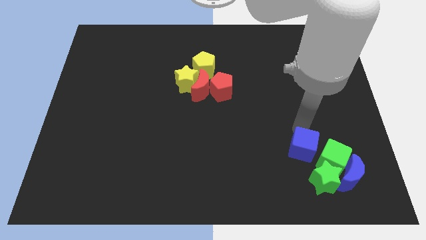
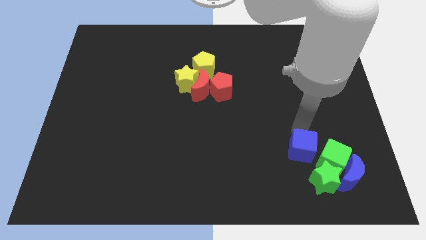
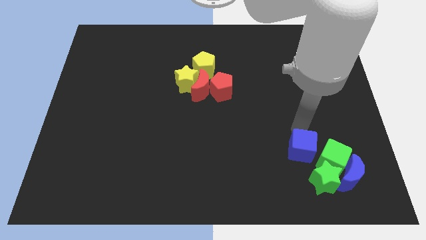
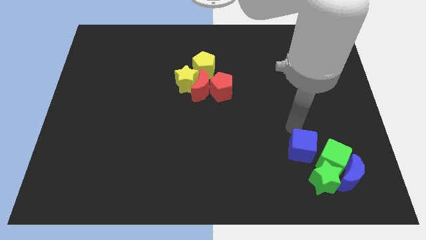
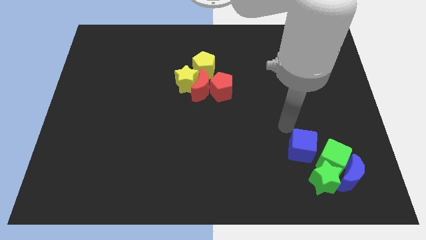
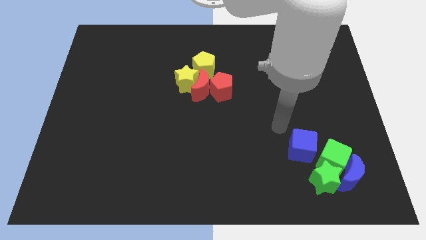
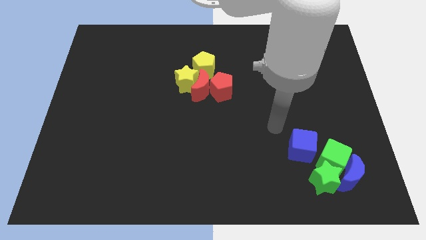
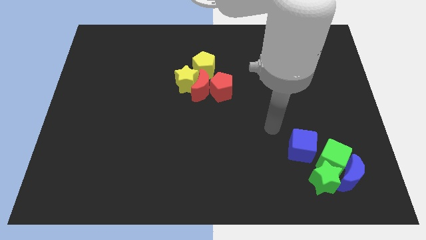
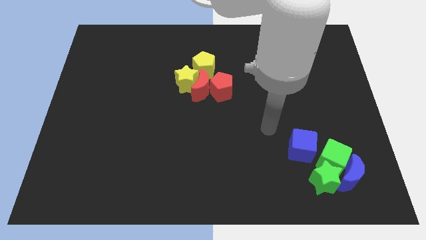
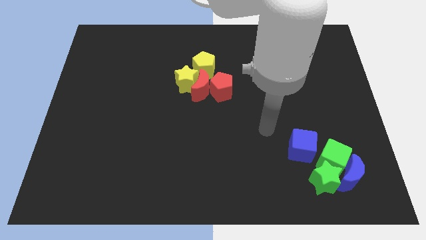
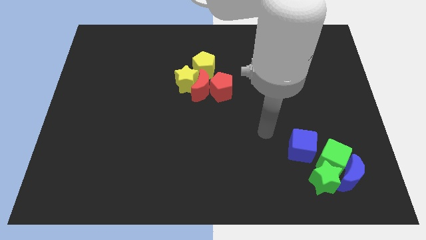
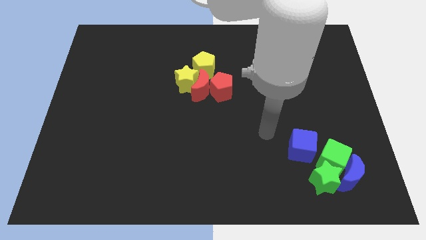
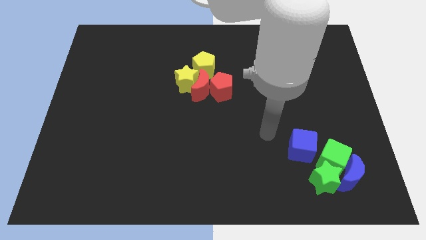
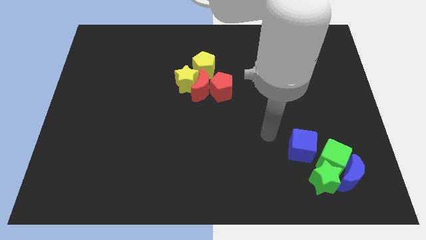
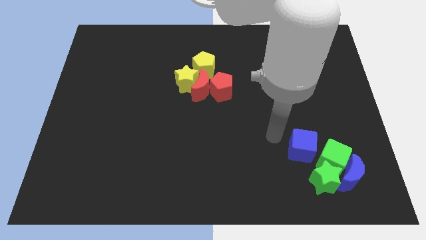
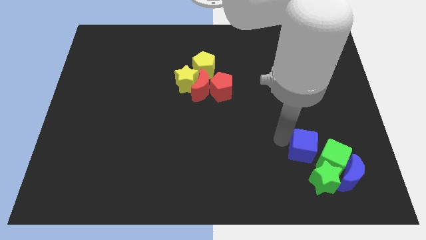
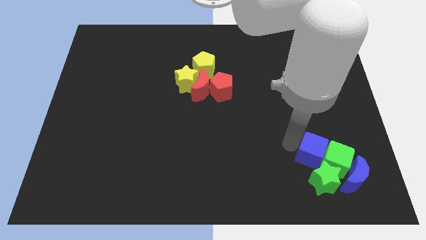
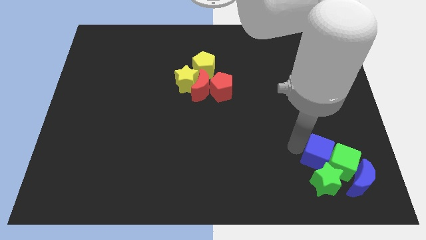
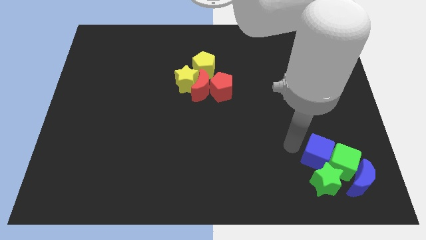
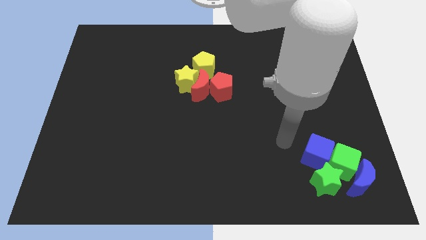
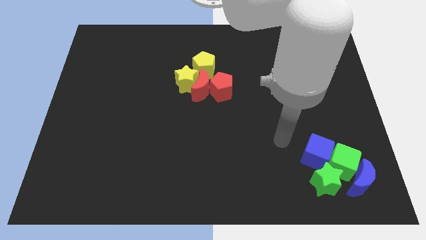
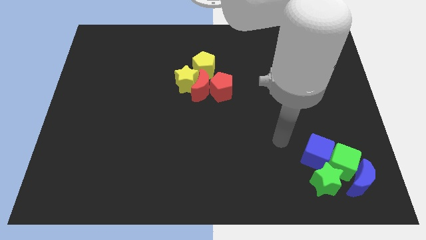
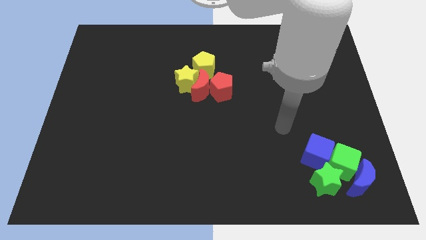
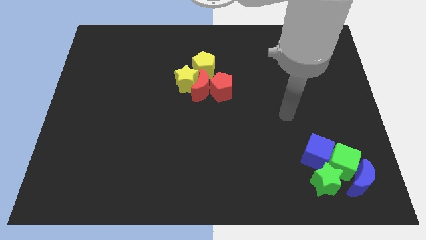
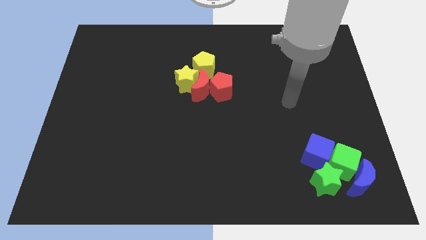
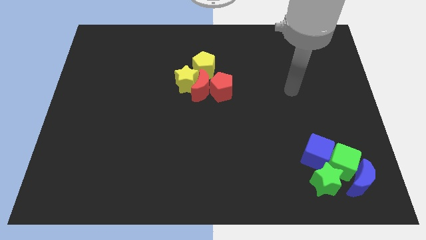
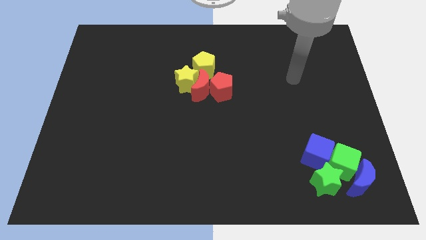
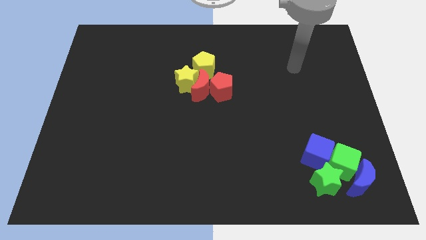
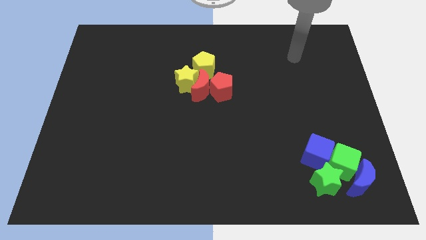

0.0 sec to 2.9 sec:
move blue cube into green cube

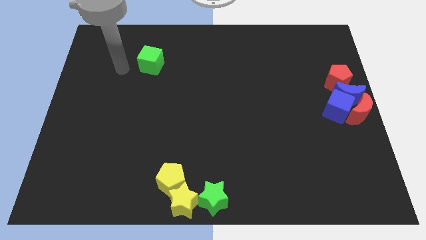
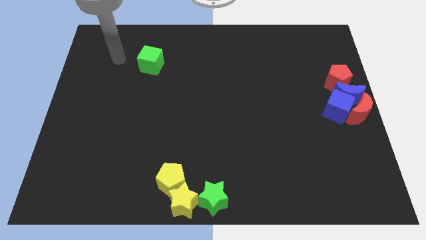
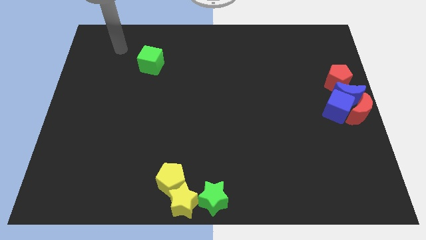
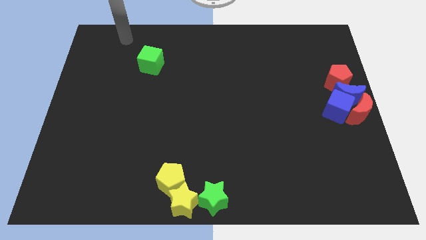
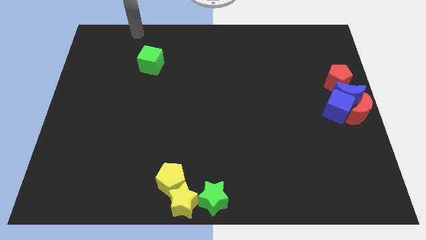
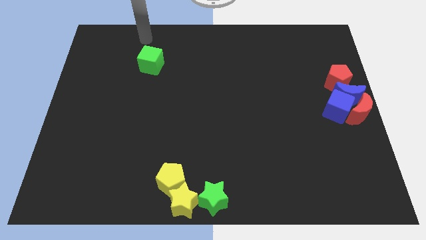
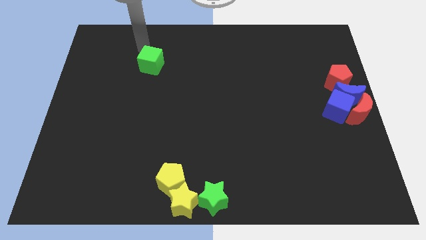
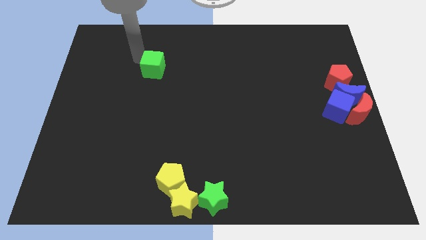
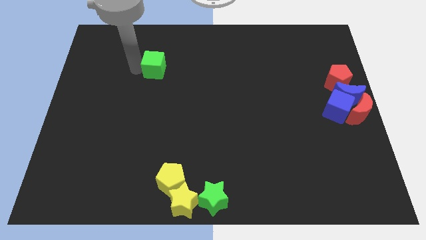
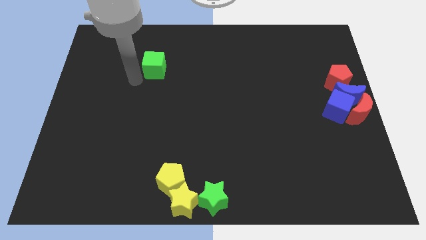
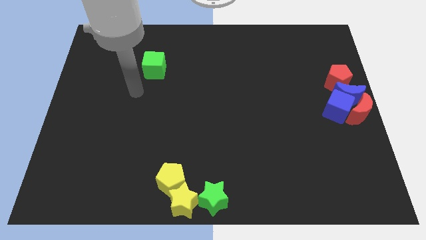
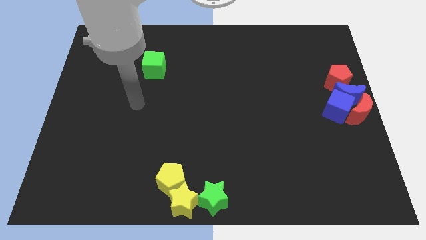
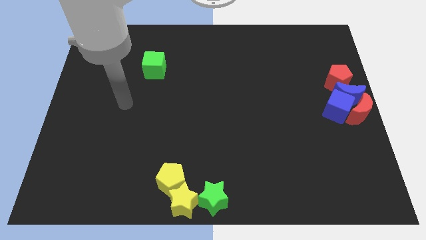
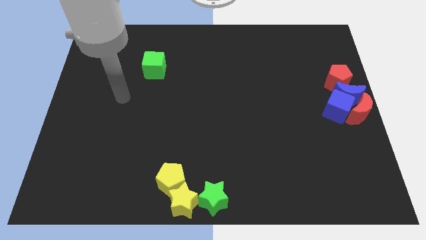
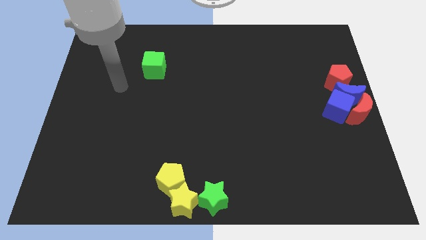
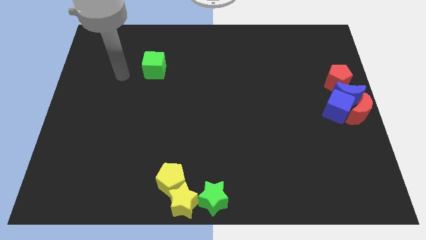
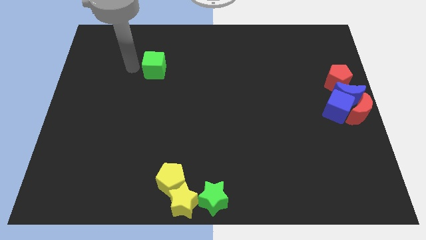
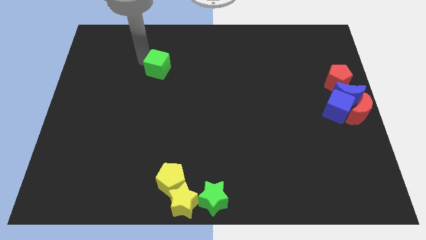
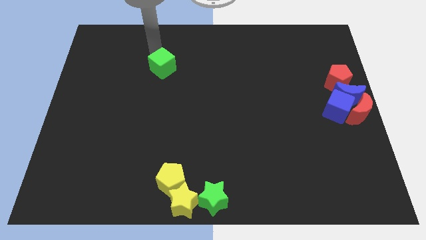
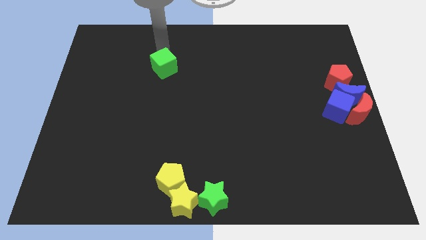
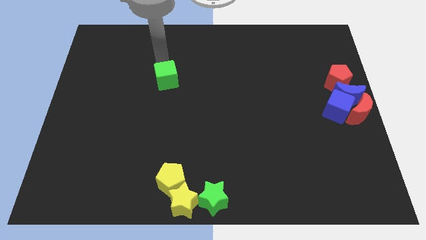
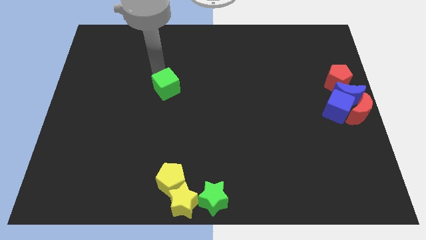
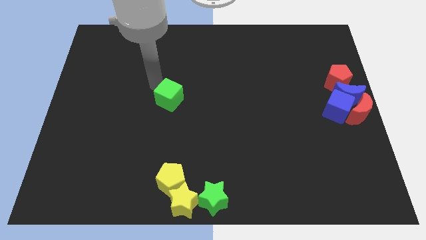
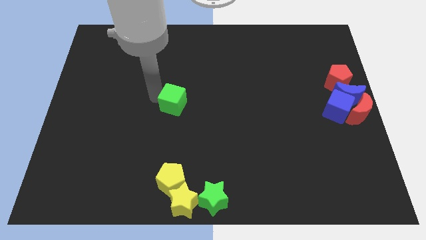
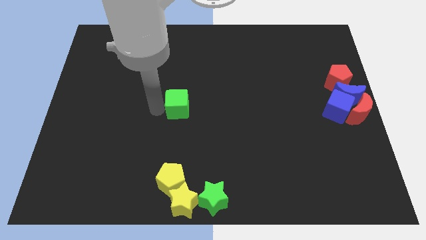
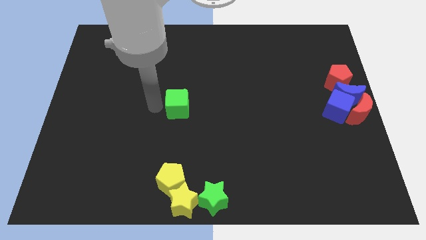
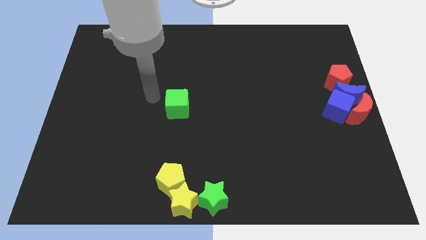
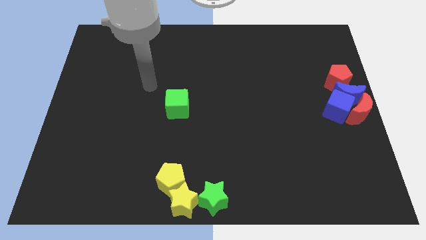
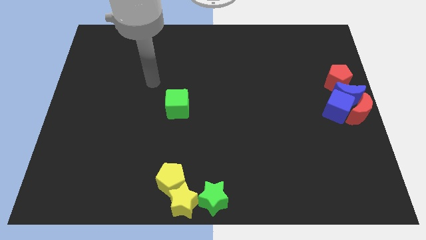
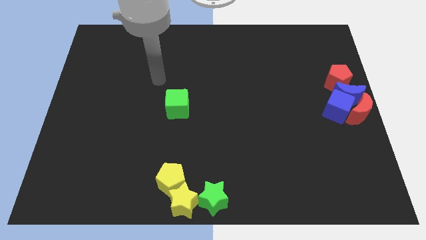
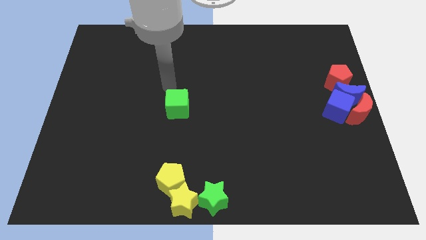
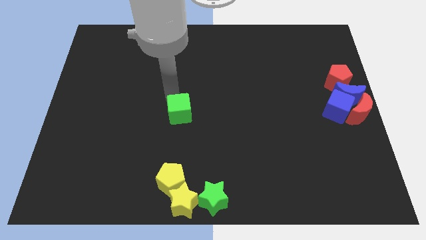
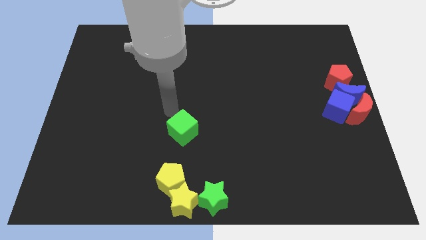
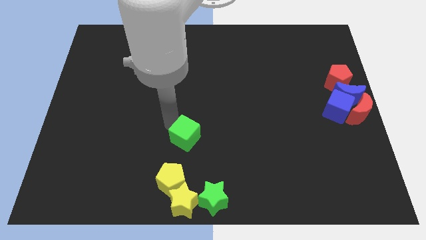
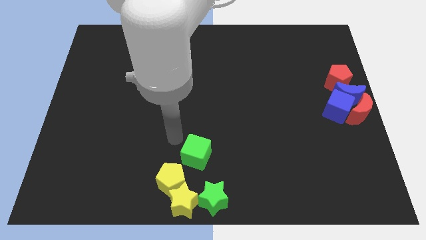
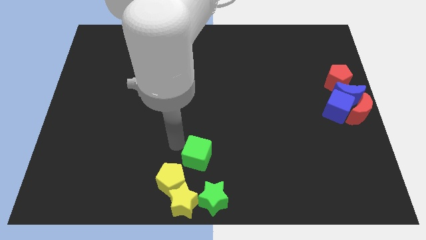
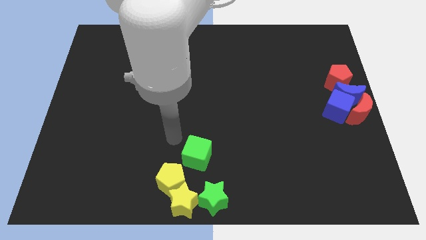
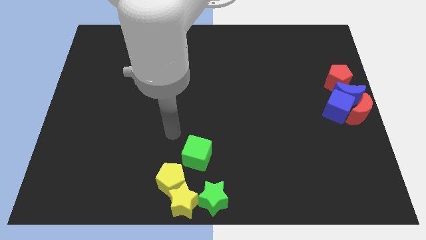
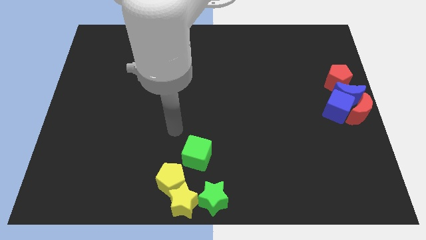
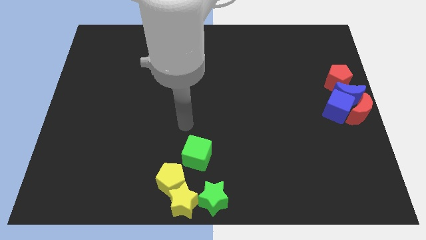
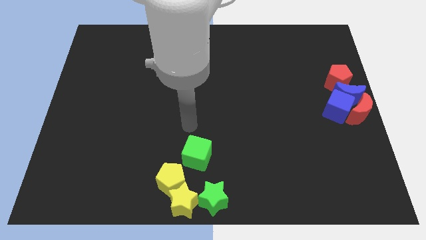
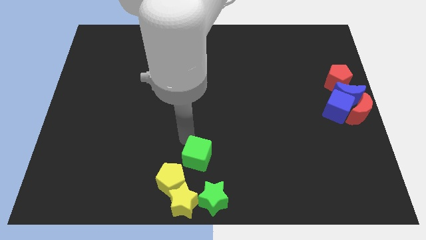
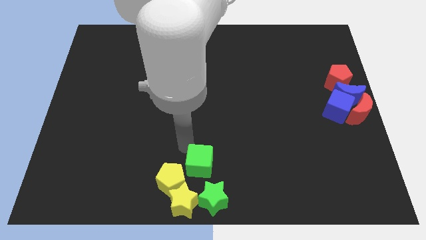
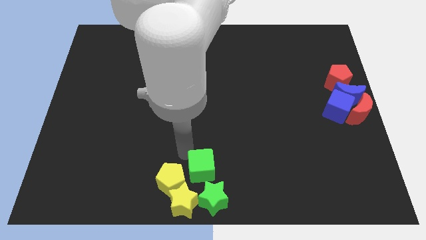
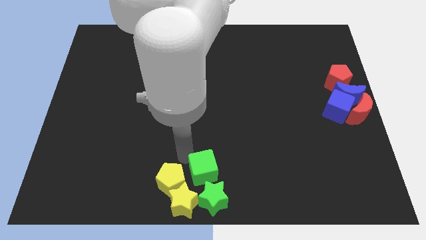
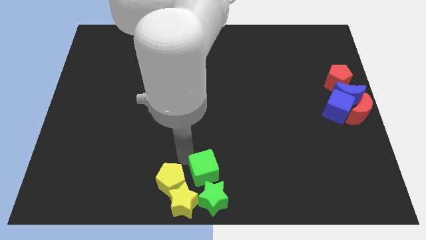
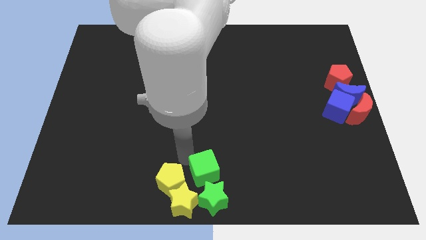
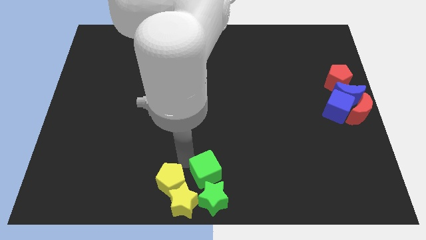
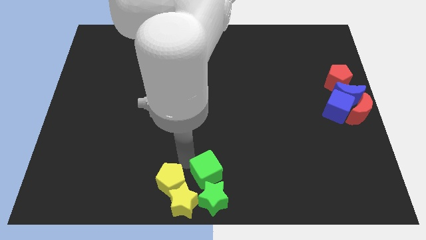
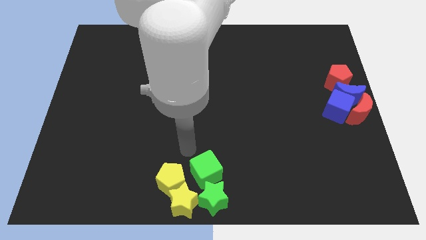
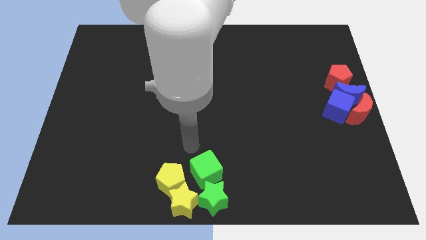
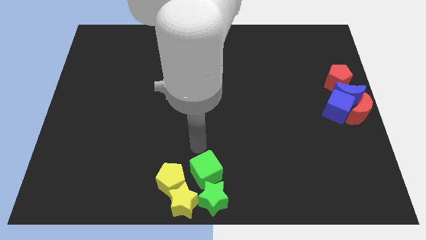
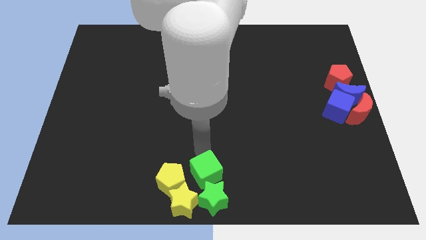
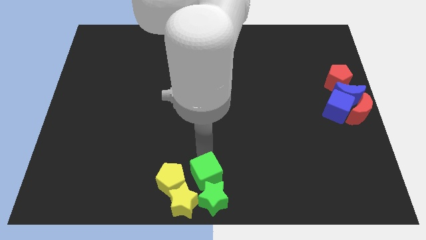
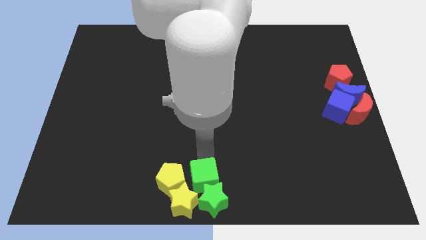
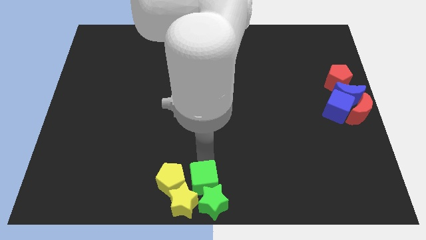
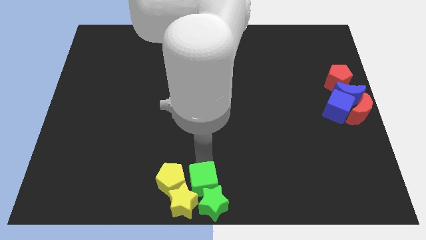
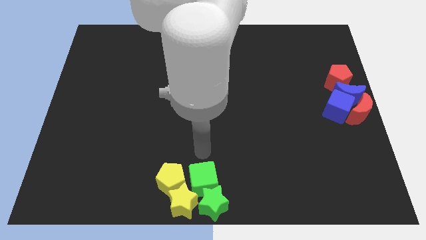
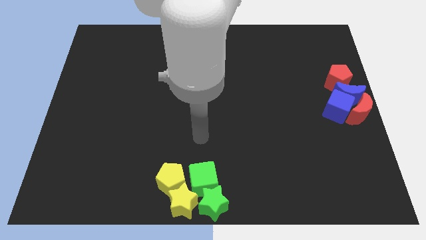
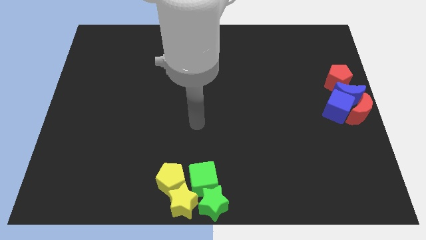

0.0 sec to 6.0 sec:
push the green cube into the green star
